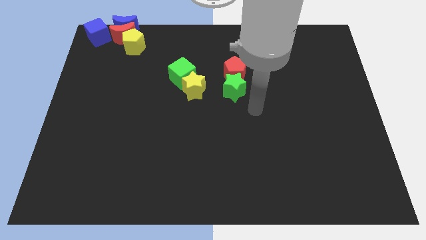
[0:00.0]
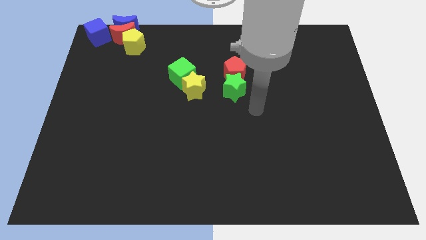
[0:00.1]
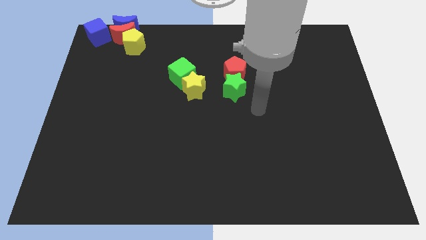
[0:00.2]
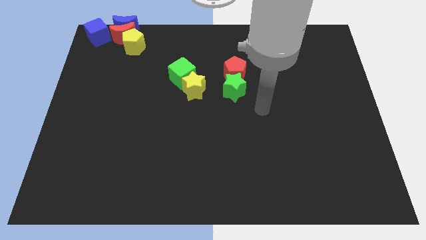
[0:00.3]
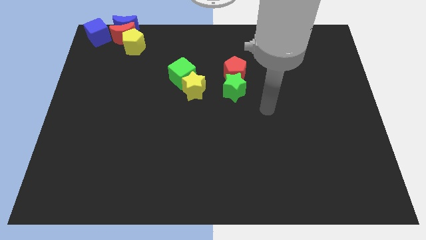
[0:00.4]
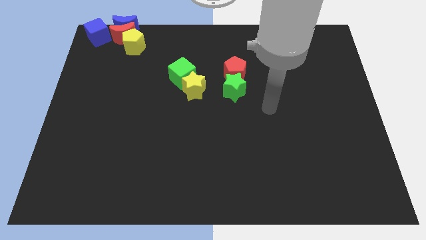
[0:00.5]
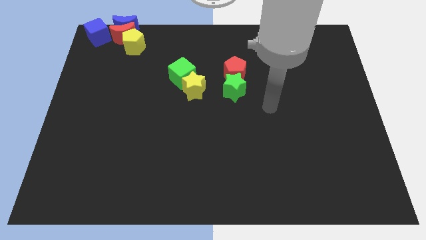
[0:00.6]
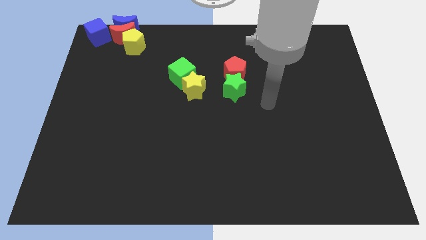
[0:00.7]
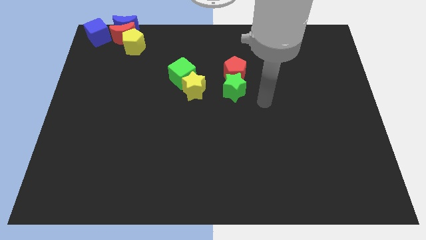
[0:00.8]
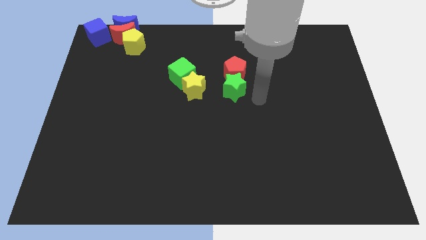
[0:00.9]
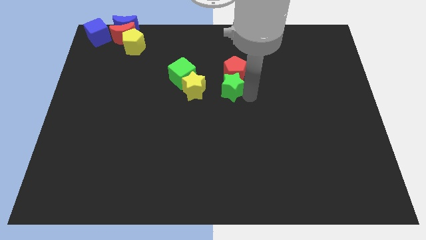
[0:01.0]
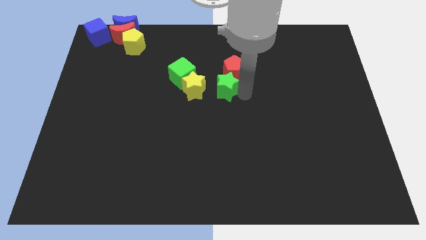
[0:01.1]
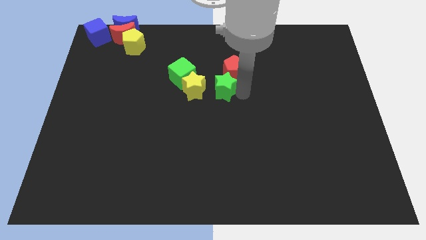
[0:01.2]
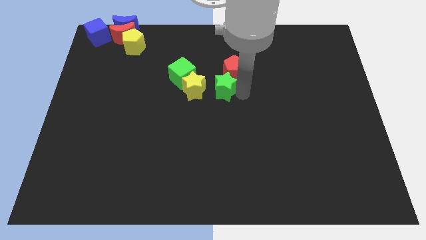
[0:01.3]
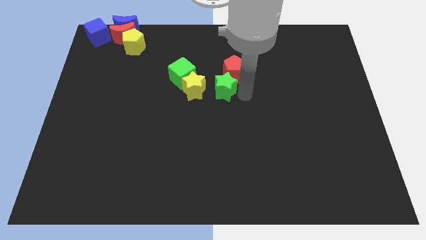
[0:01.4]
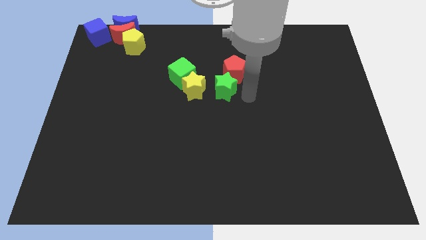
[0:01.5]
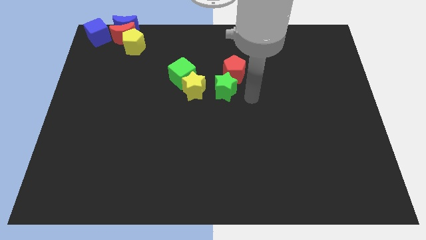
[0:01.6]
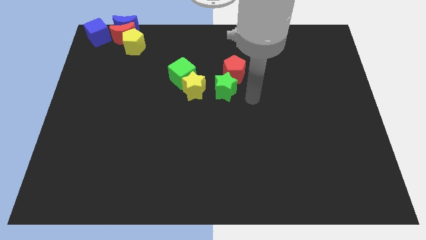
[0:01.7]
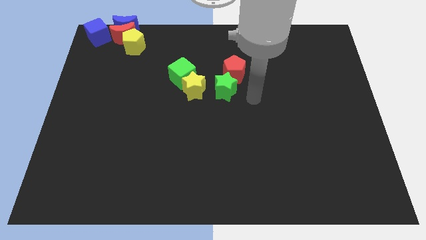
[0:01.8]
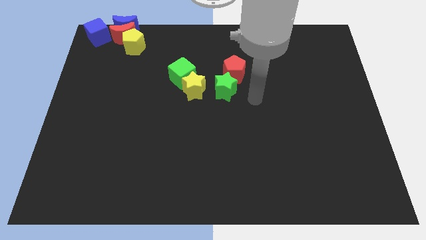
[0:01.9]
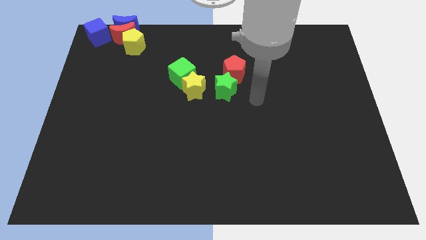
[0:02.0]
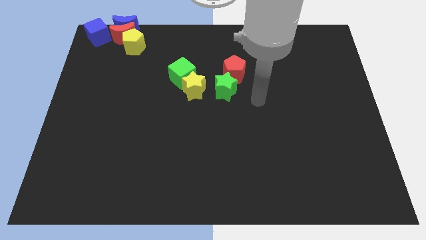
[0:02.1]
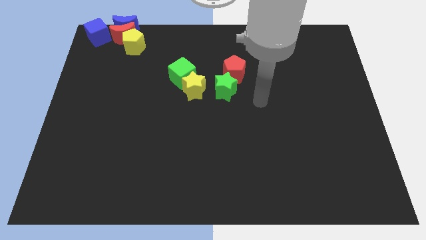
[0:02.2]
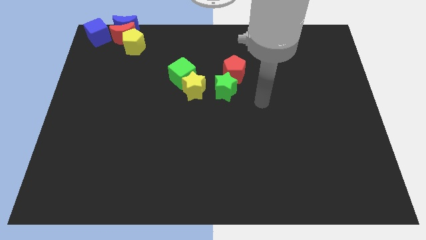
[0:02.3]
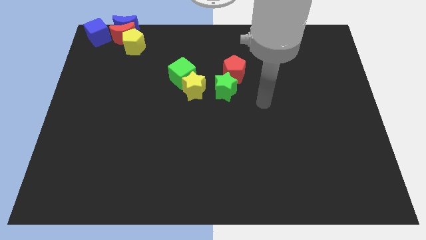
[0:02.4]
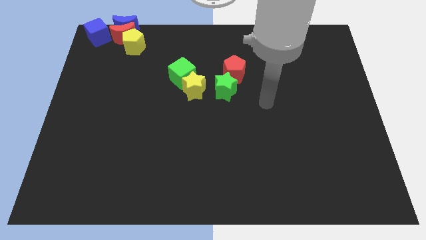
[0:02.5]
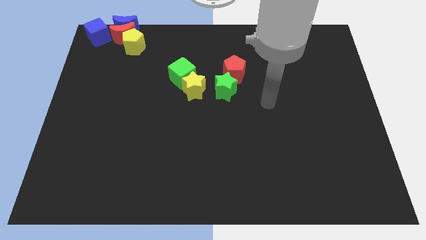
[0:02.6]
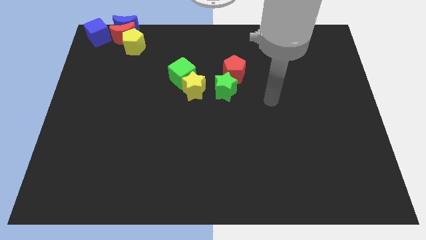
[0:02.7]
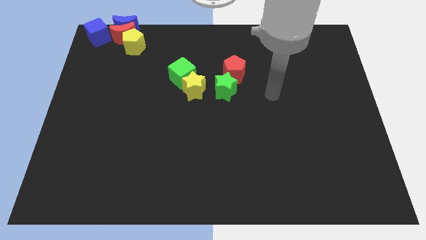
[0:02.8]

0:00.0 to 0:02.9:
place the green star to the bottom left of red pentagon

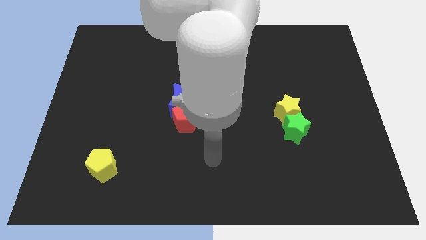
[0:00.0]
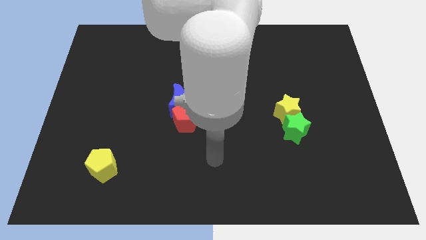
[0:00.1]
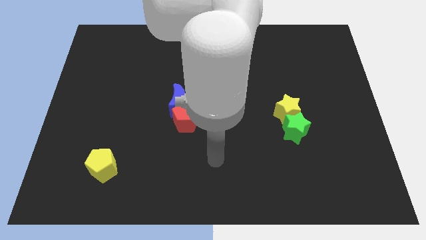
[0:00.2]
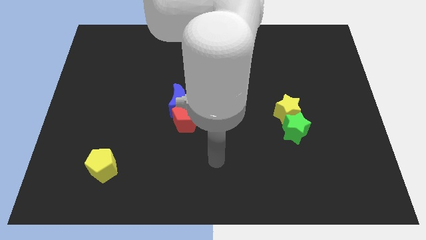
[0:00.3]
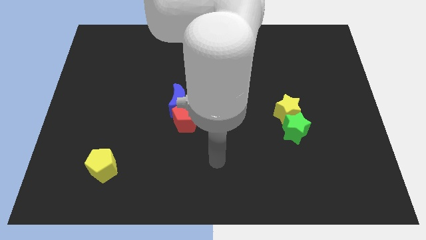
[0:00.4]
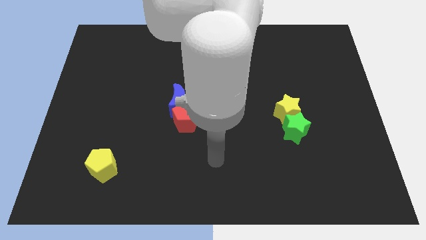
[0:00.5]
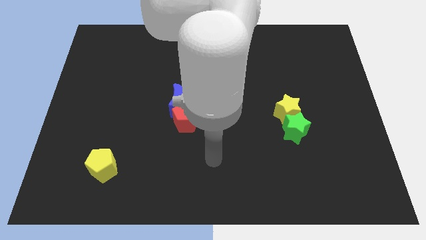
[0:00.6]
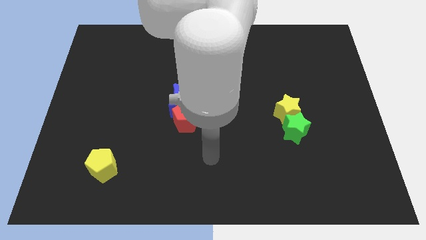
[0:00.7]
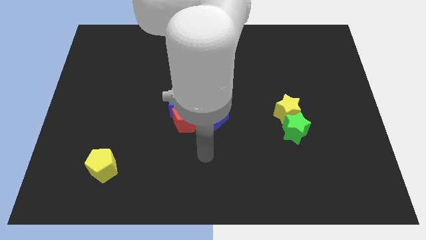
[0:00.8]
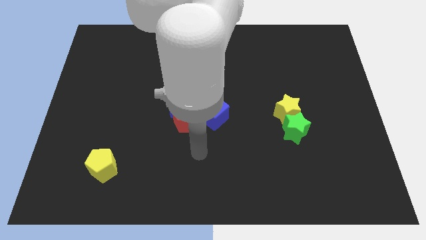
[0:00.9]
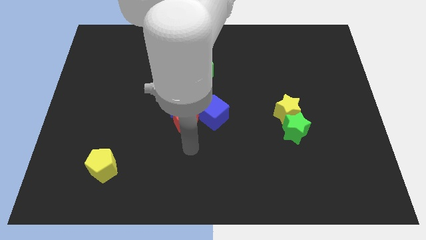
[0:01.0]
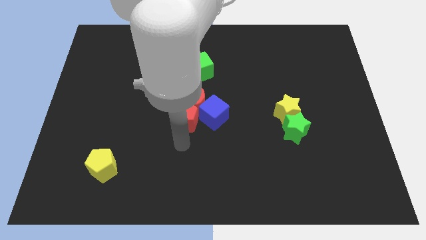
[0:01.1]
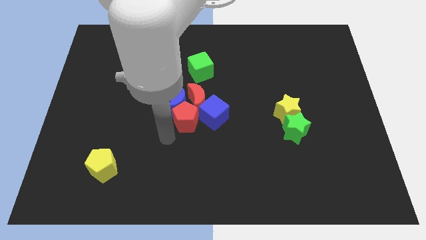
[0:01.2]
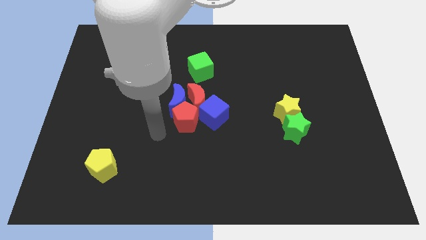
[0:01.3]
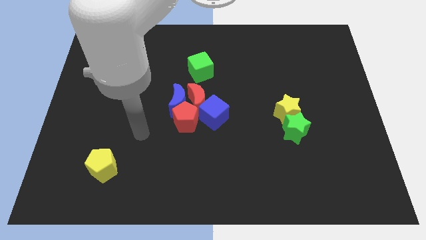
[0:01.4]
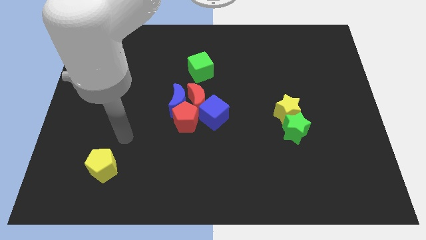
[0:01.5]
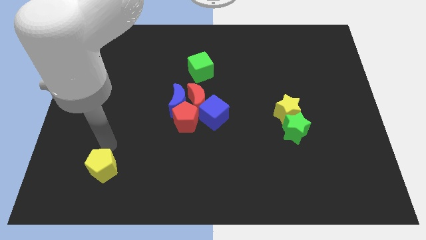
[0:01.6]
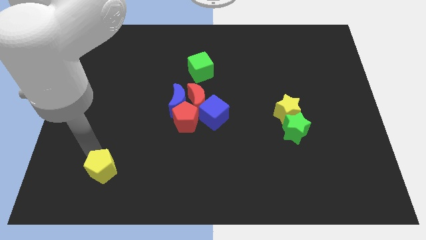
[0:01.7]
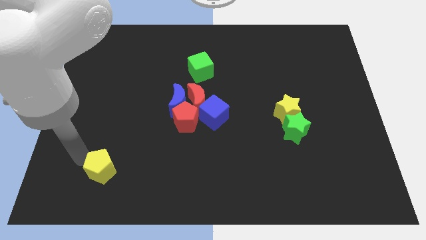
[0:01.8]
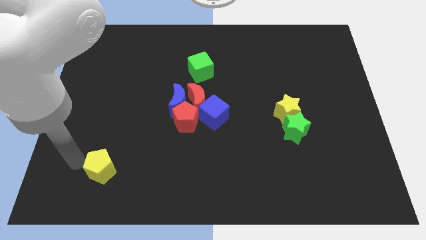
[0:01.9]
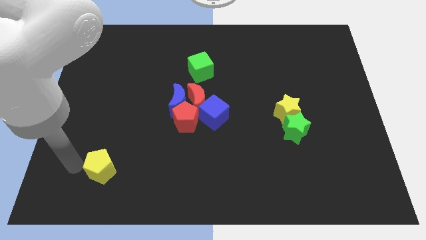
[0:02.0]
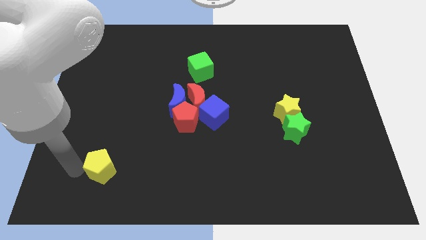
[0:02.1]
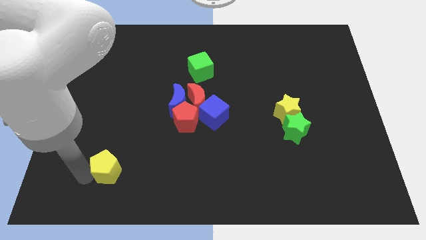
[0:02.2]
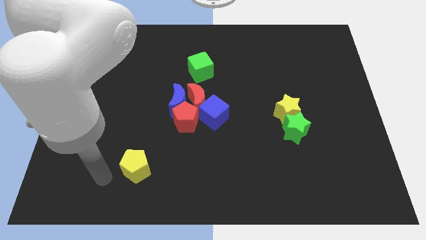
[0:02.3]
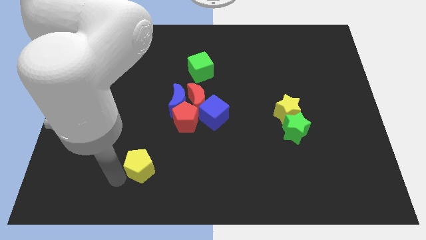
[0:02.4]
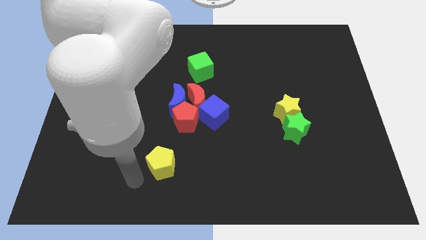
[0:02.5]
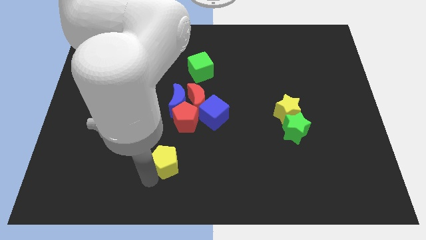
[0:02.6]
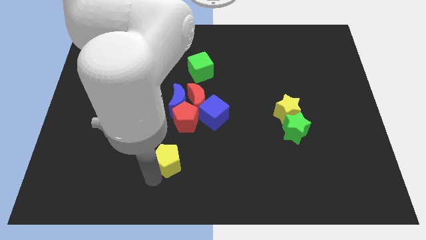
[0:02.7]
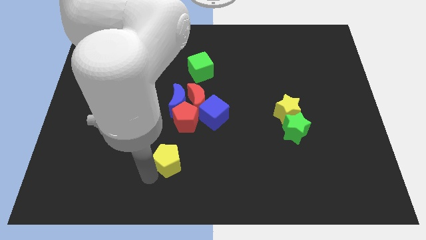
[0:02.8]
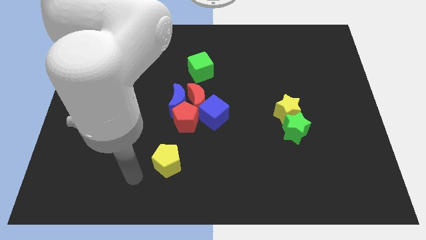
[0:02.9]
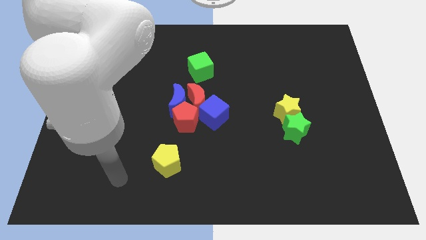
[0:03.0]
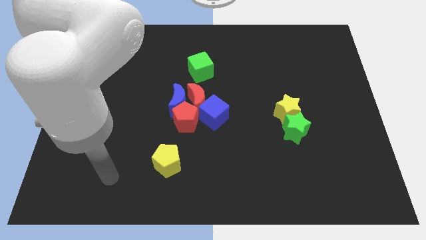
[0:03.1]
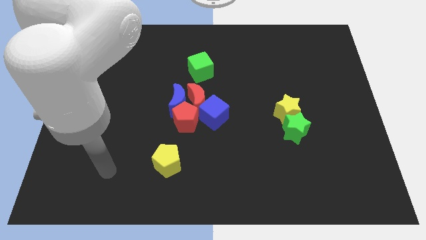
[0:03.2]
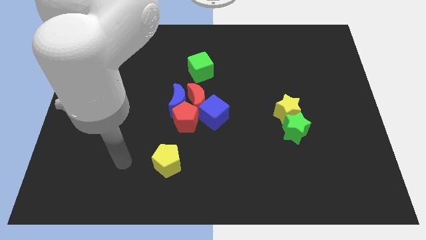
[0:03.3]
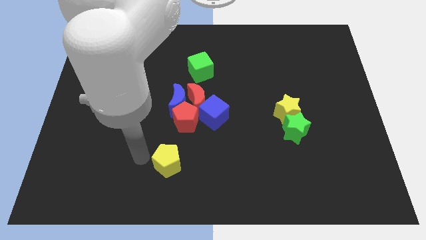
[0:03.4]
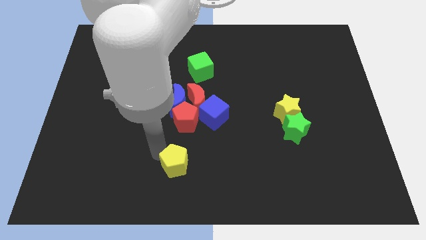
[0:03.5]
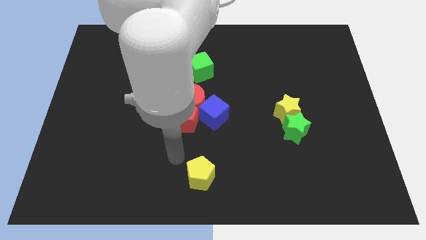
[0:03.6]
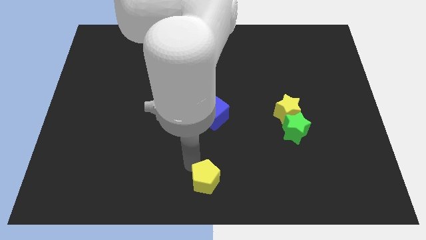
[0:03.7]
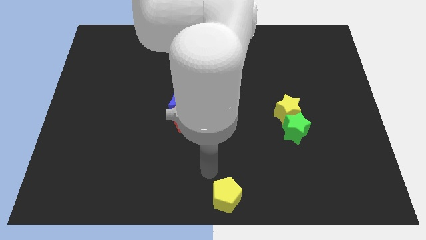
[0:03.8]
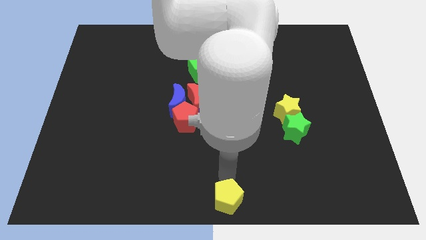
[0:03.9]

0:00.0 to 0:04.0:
move the yellow pentagon to the bottom center of the board

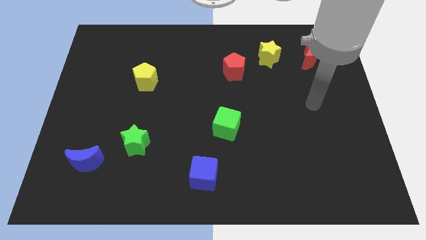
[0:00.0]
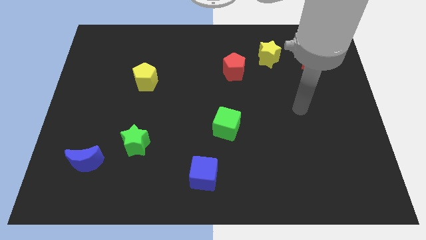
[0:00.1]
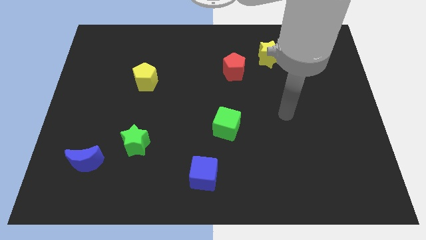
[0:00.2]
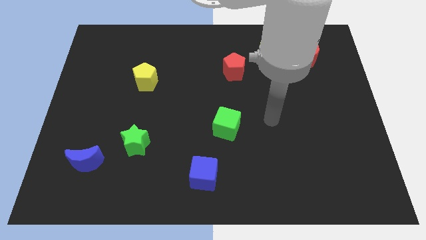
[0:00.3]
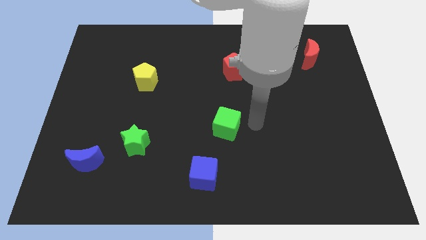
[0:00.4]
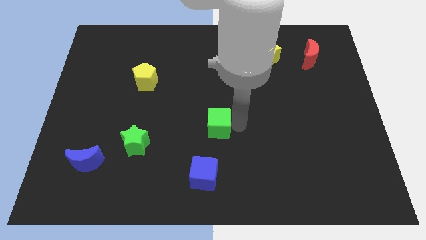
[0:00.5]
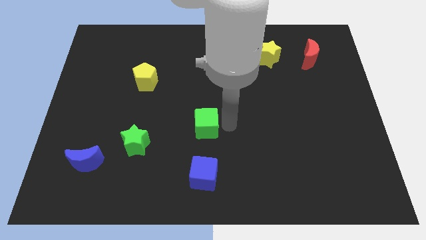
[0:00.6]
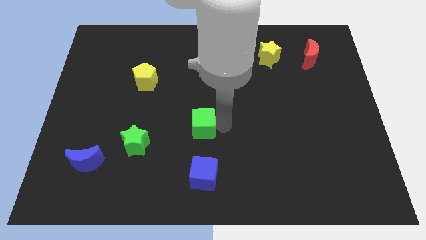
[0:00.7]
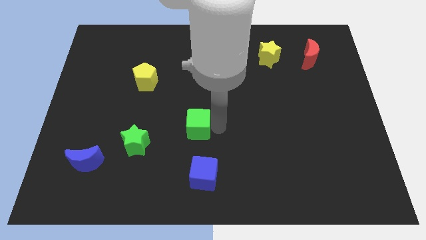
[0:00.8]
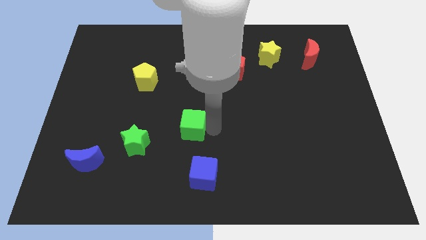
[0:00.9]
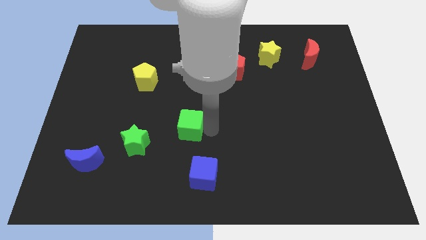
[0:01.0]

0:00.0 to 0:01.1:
slide green cube to top of blue cube

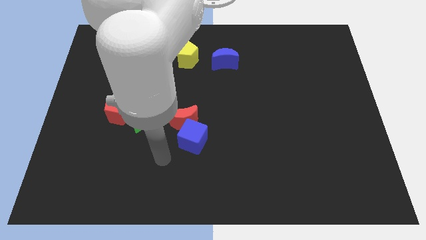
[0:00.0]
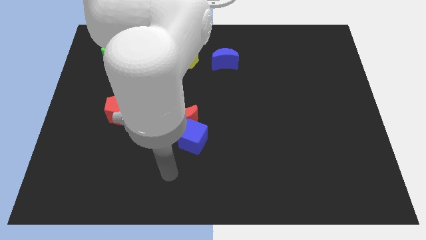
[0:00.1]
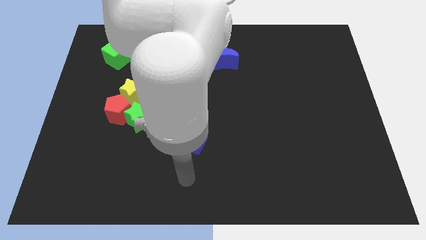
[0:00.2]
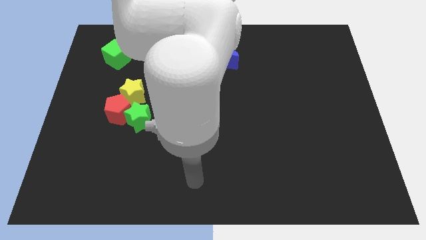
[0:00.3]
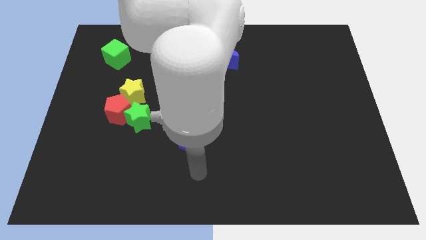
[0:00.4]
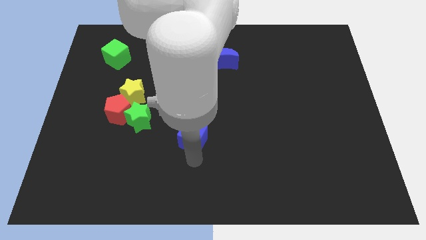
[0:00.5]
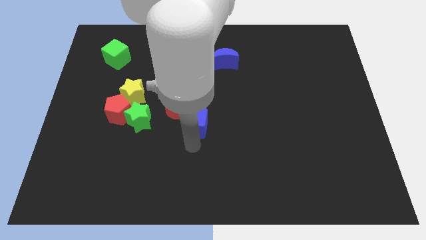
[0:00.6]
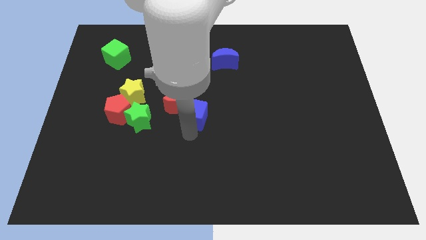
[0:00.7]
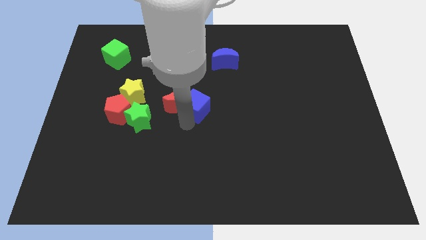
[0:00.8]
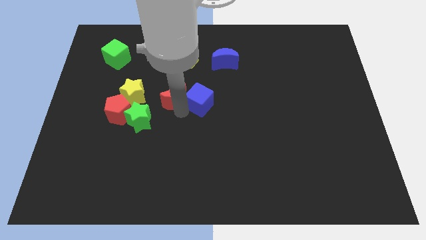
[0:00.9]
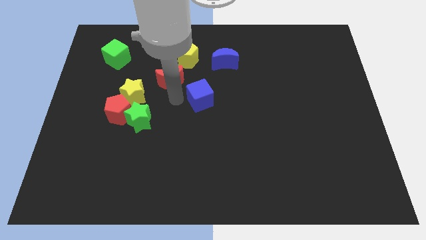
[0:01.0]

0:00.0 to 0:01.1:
move the blue cube to the center of the board
